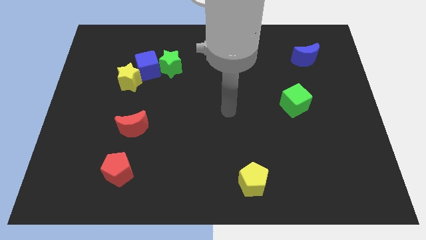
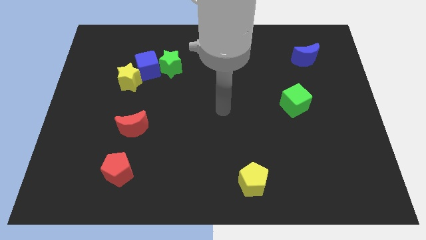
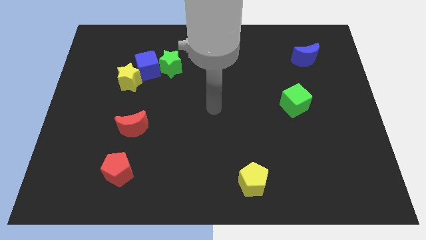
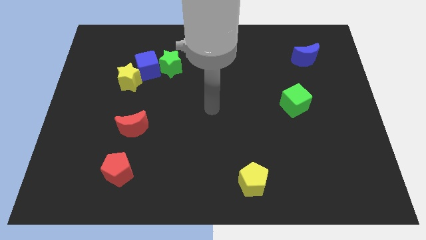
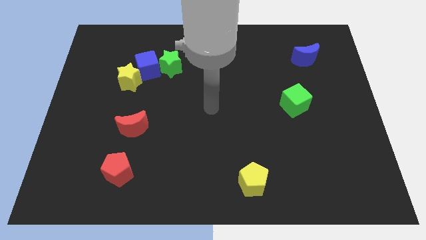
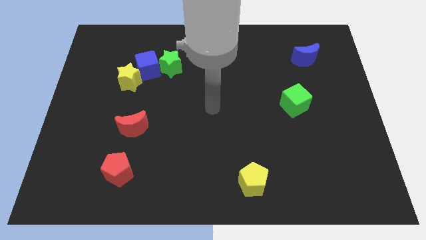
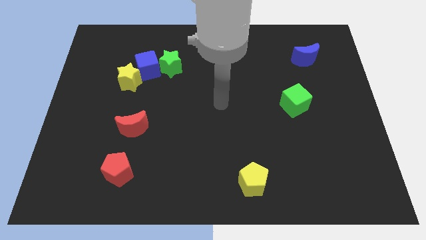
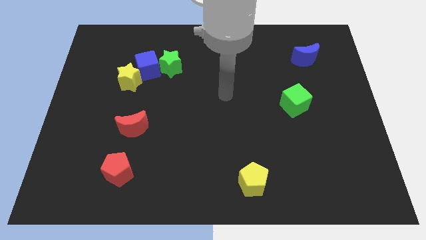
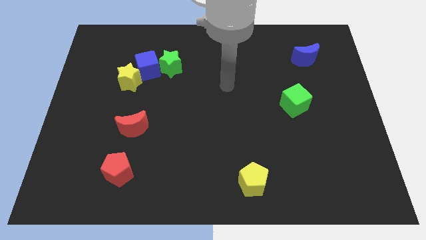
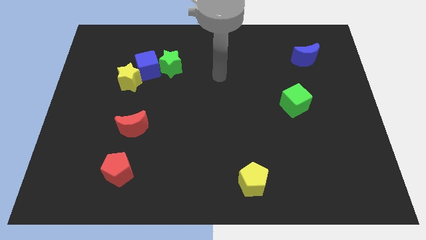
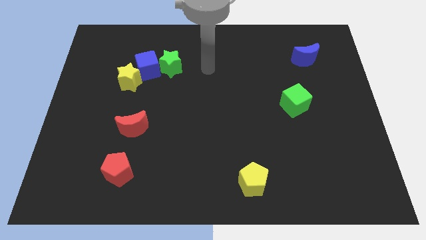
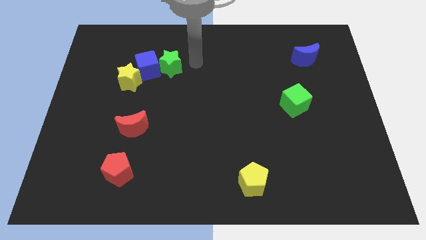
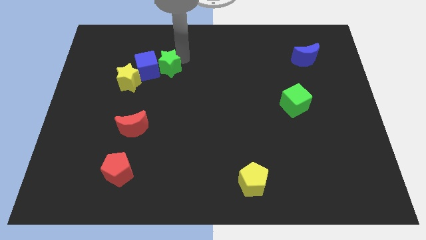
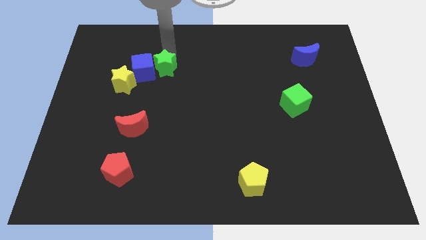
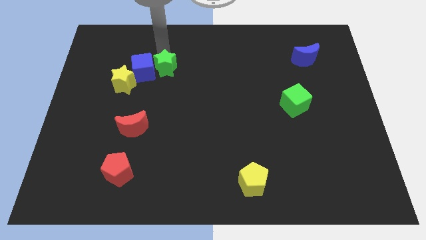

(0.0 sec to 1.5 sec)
place your arm to the top of the green star

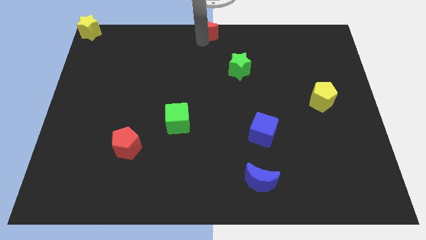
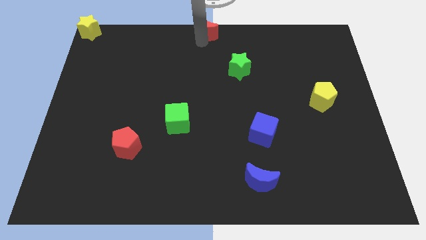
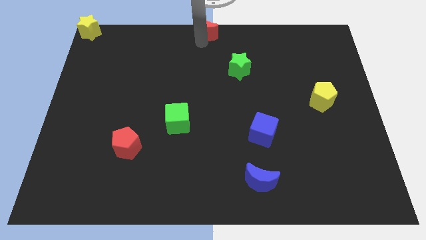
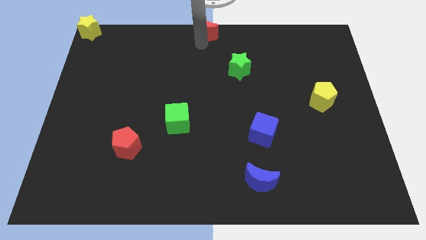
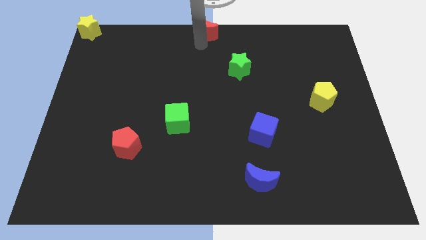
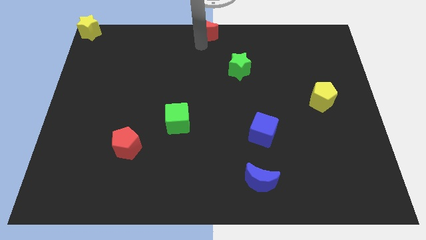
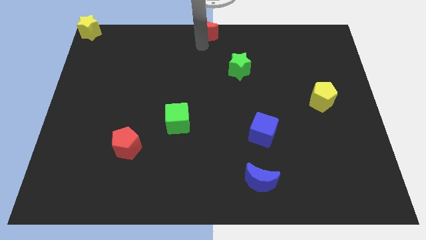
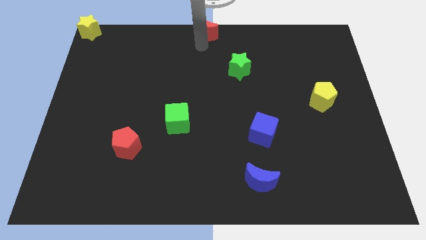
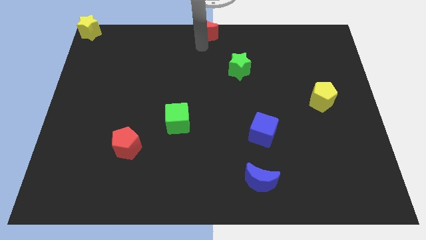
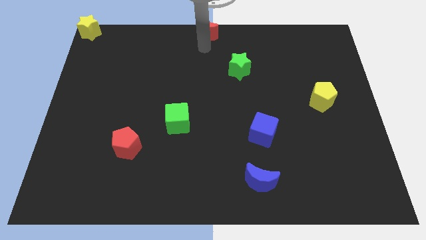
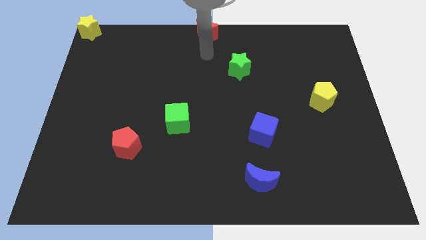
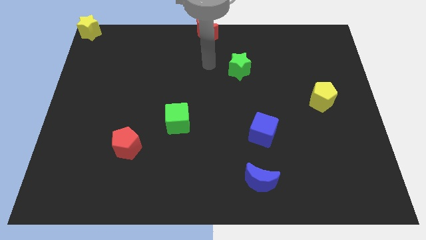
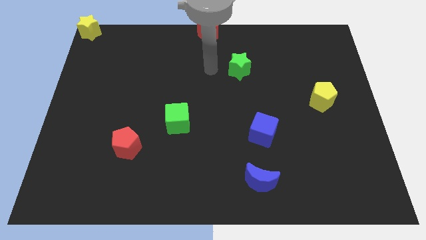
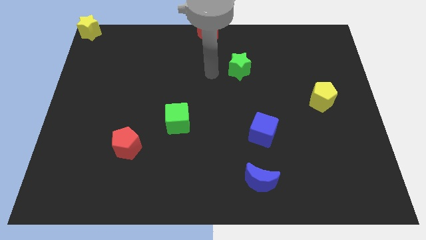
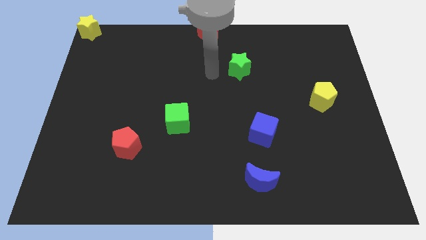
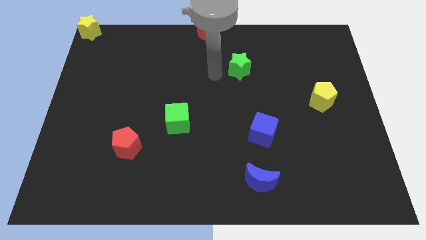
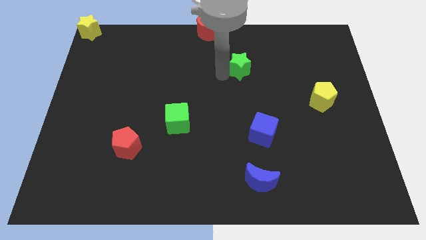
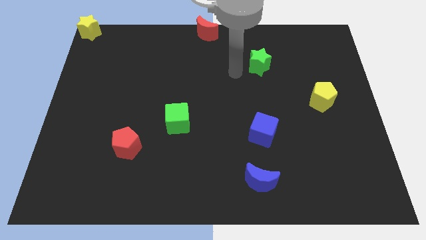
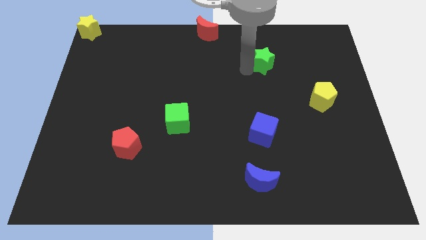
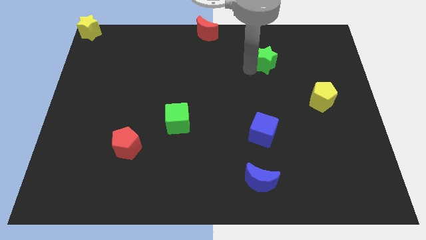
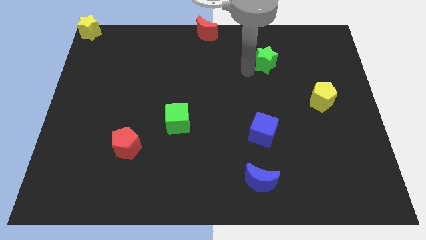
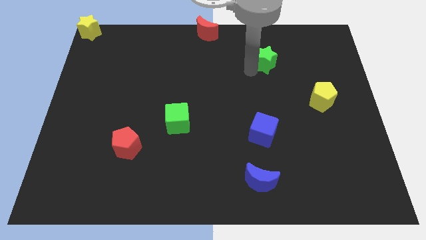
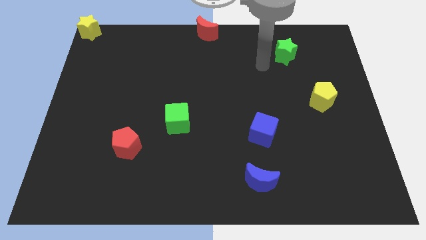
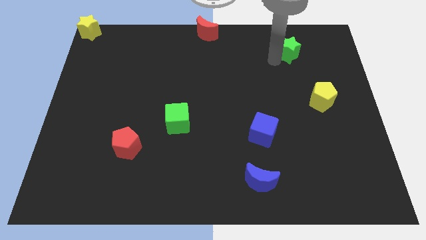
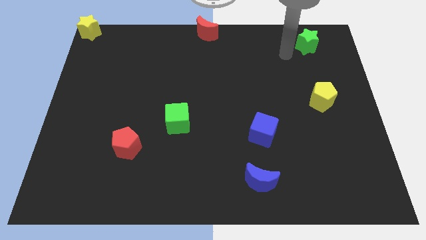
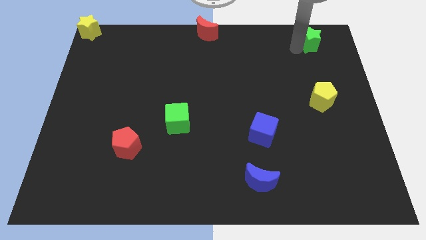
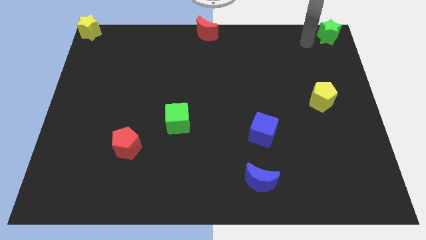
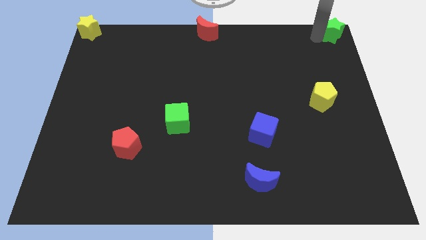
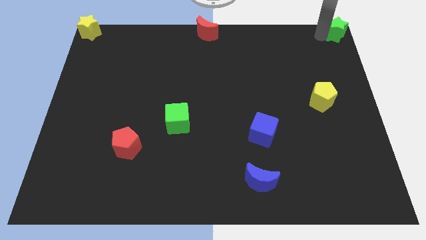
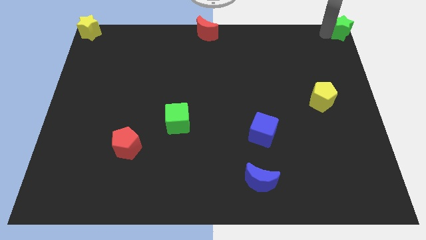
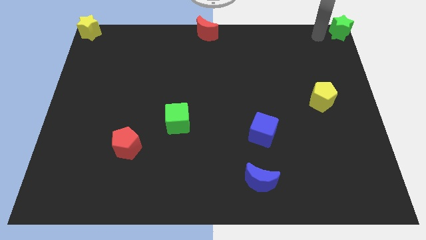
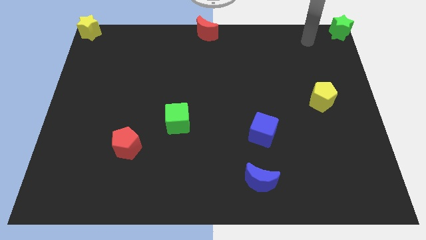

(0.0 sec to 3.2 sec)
place the green star at the top right corner of the table

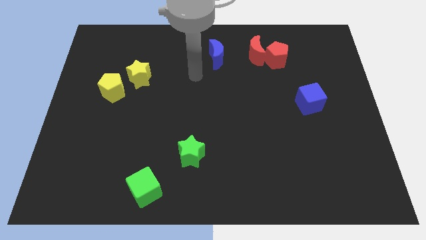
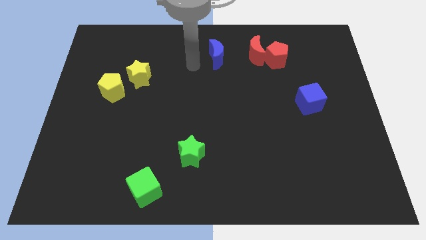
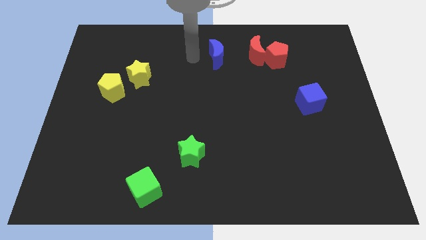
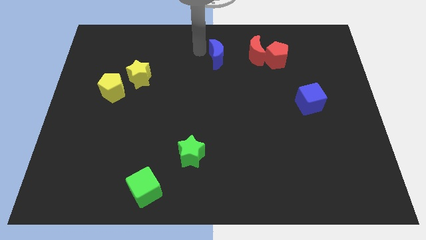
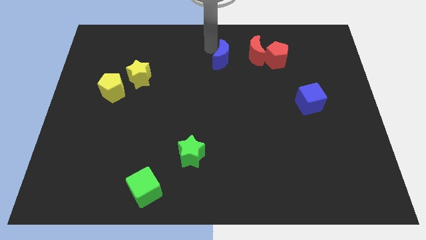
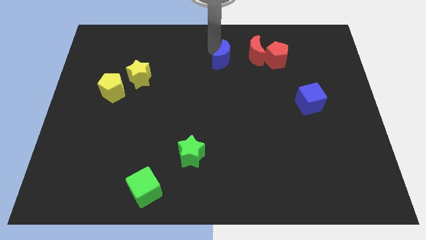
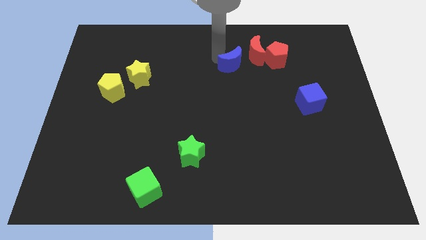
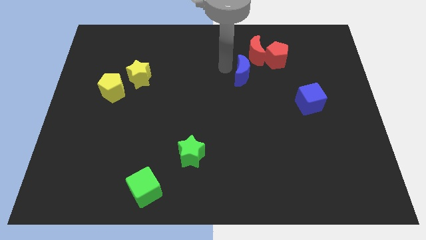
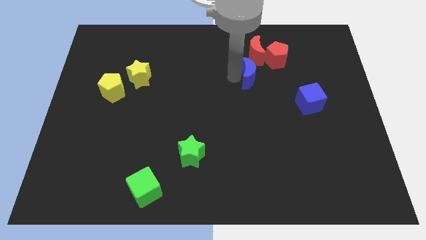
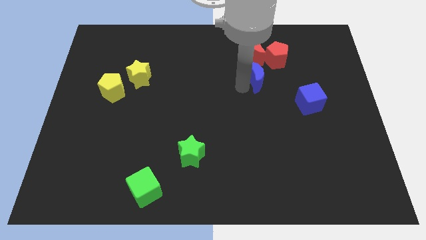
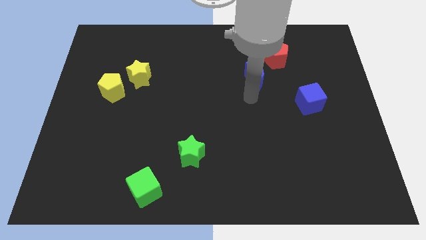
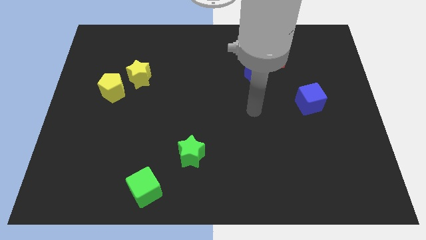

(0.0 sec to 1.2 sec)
place the blue crescent below the red crescent

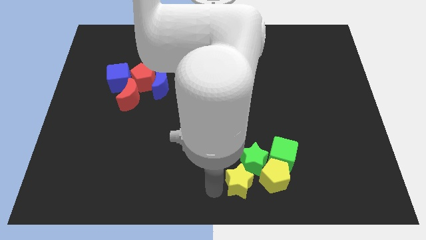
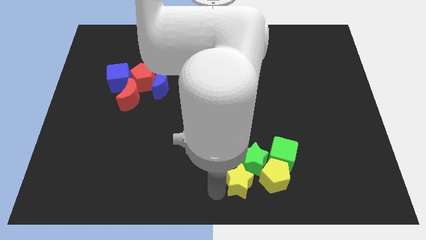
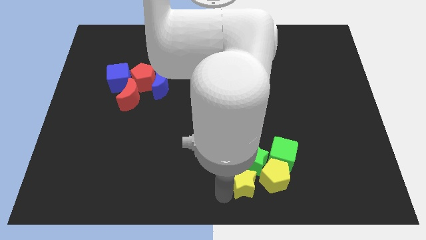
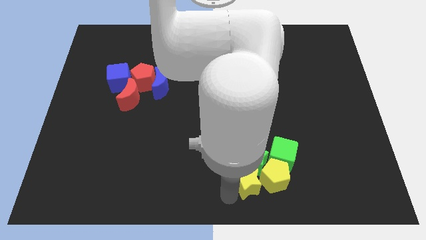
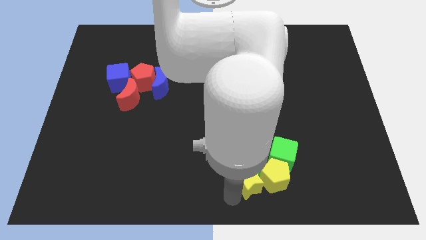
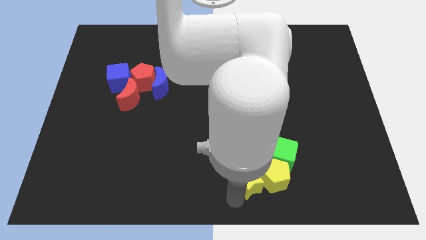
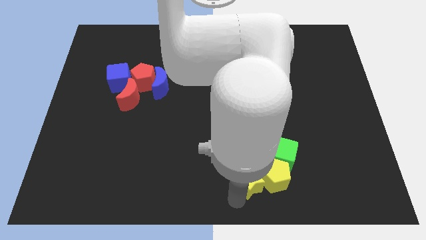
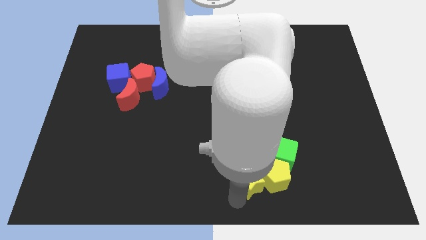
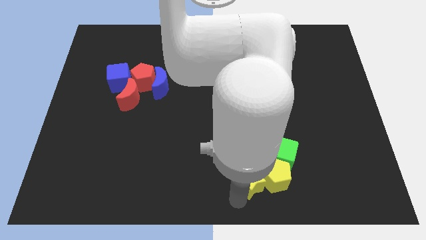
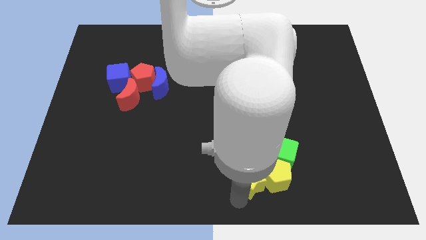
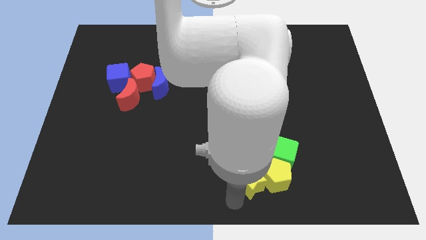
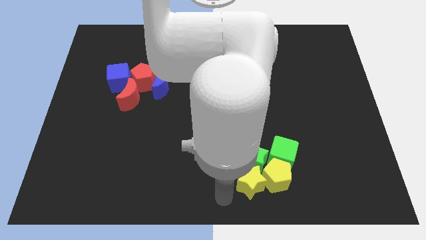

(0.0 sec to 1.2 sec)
push the green star into the yellow pentagon

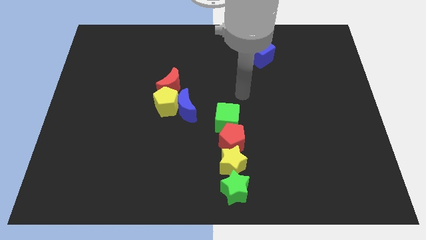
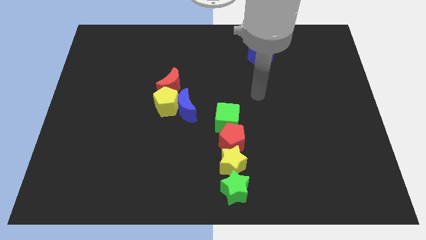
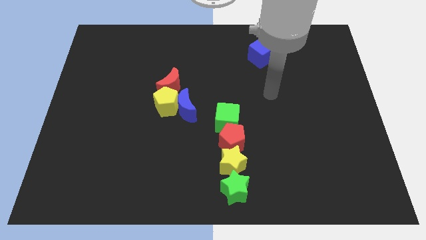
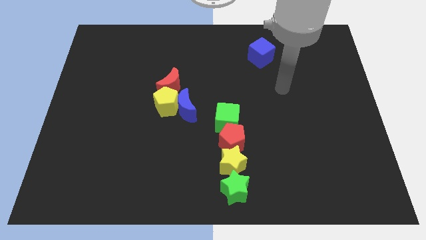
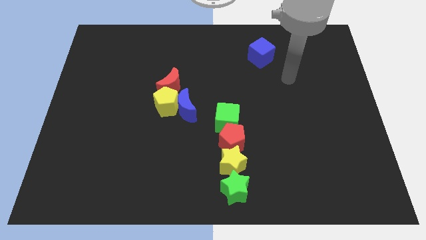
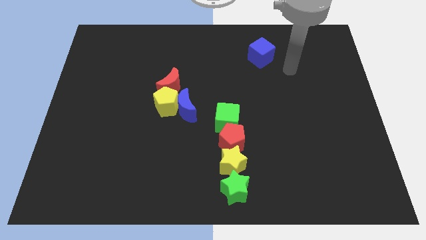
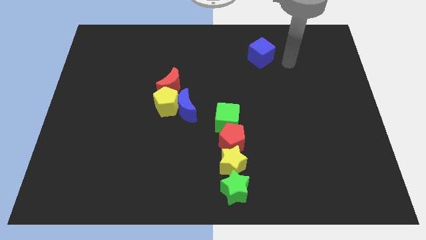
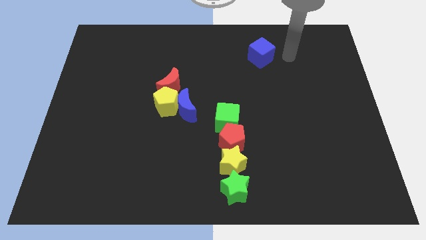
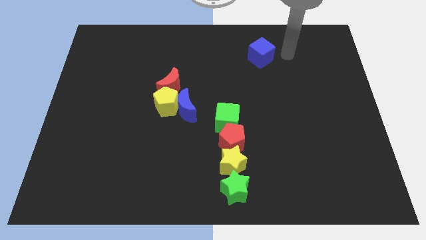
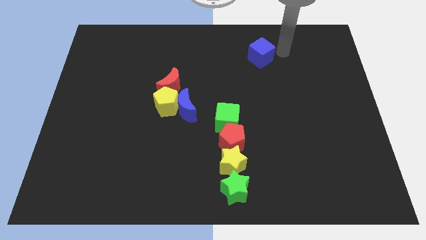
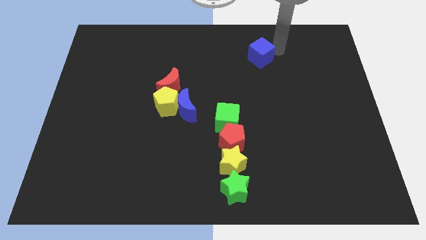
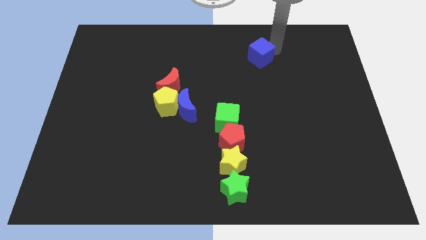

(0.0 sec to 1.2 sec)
place your arm above blue cube

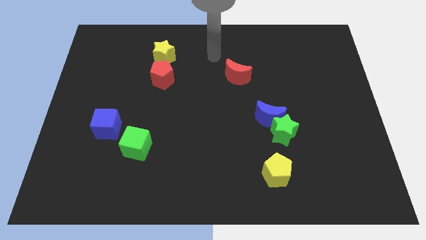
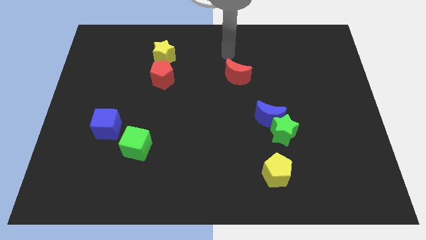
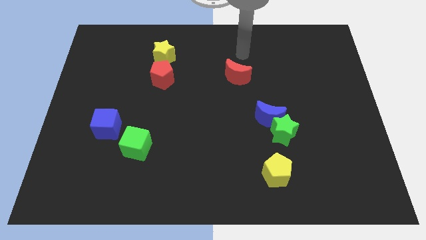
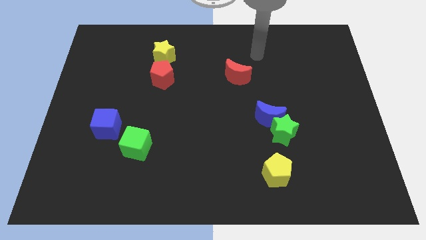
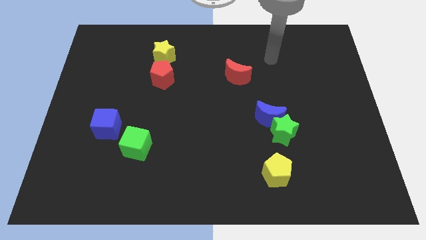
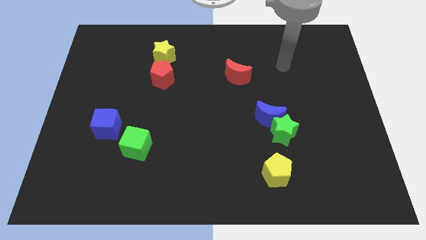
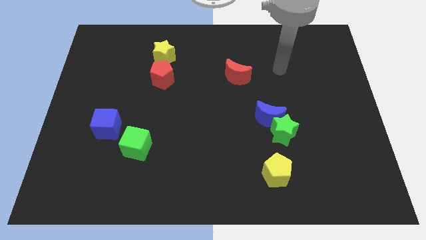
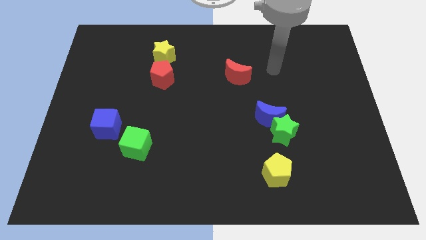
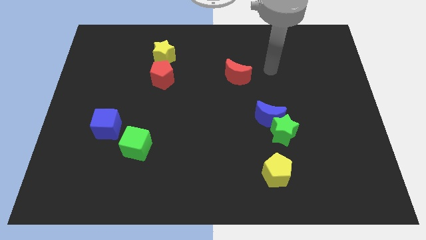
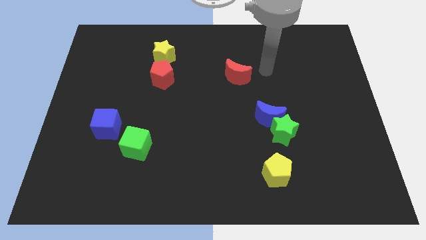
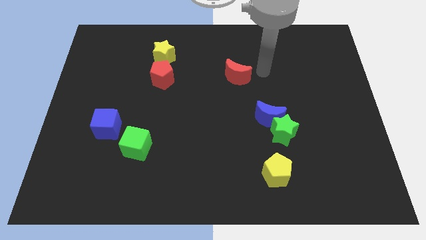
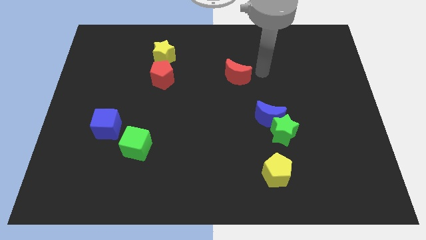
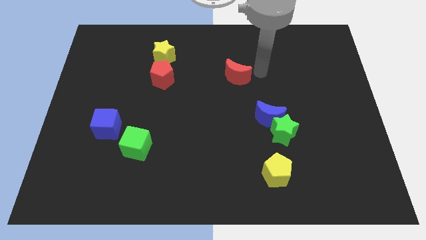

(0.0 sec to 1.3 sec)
move your arm towards the red crescent
